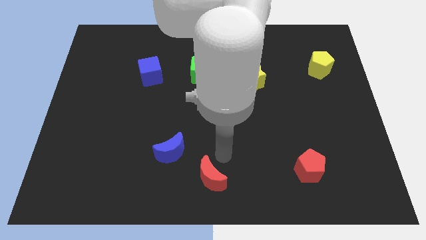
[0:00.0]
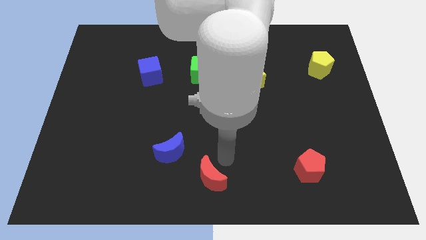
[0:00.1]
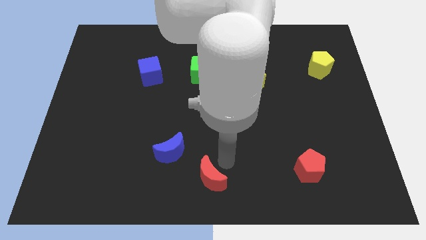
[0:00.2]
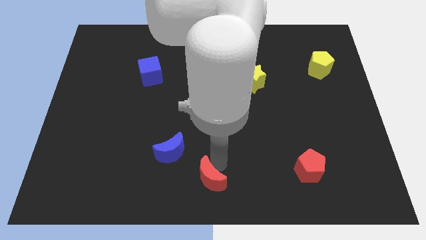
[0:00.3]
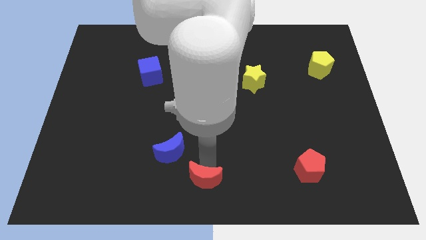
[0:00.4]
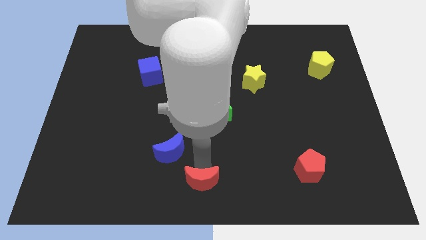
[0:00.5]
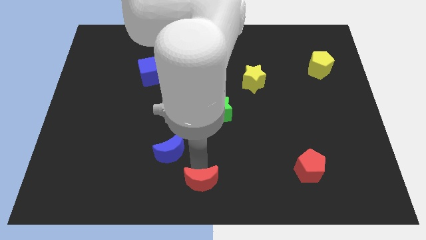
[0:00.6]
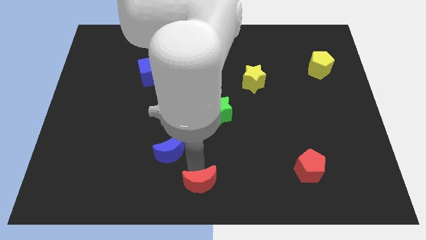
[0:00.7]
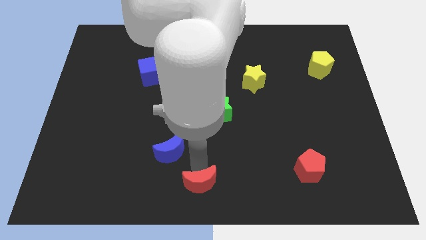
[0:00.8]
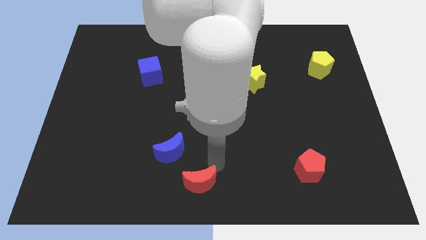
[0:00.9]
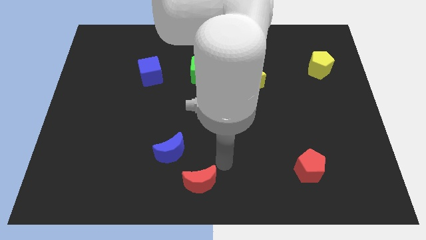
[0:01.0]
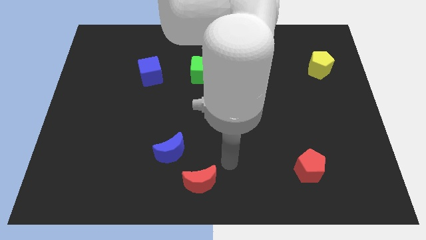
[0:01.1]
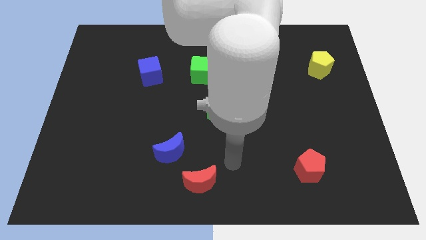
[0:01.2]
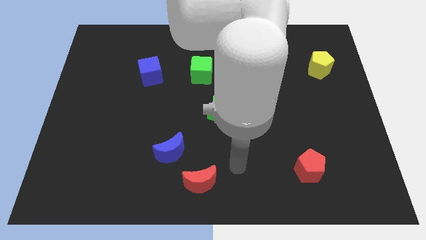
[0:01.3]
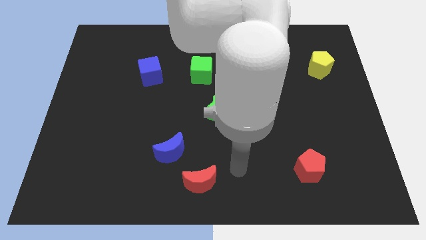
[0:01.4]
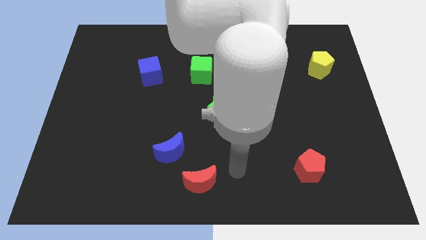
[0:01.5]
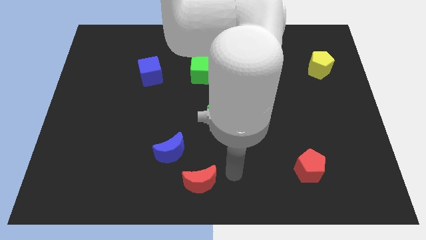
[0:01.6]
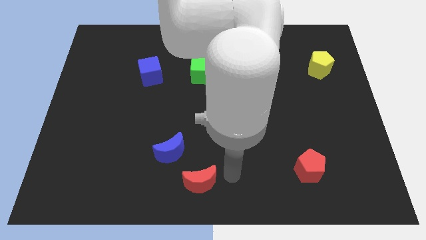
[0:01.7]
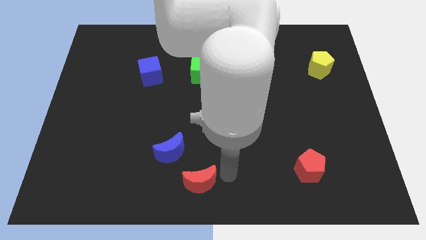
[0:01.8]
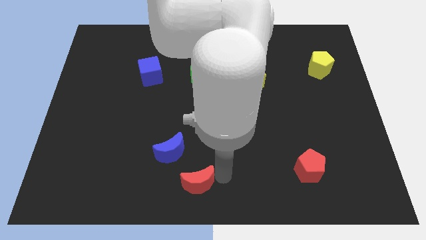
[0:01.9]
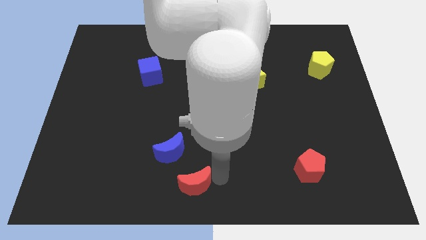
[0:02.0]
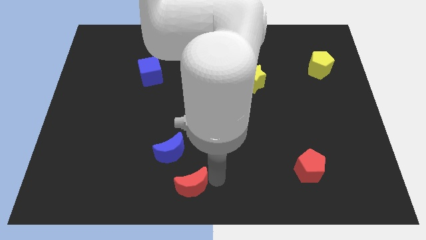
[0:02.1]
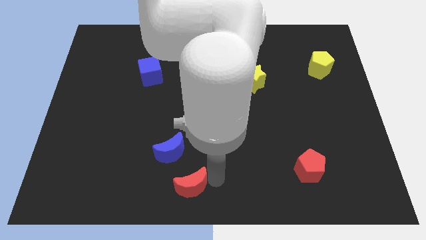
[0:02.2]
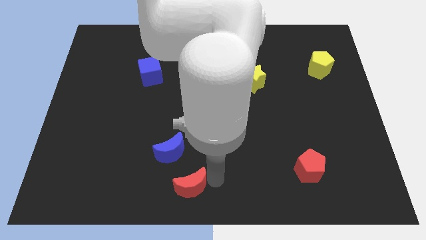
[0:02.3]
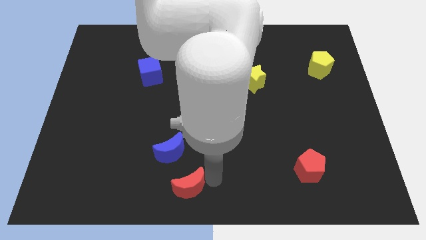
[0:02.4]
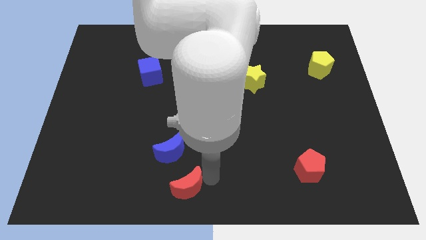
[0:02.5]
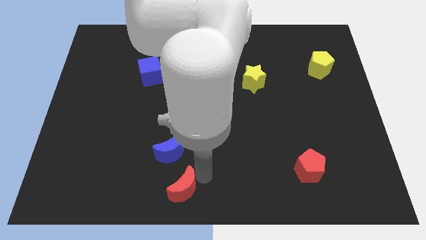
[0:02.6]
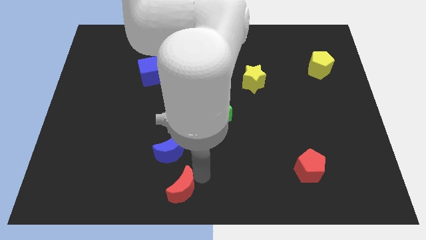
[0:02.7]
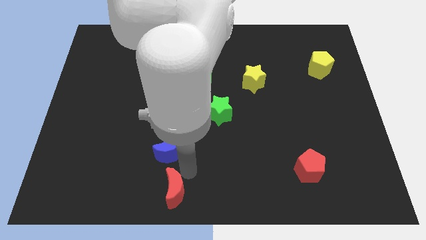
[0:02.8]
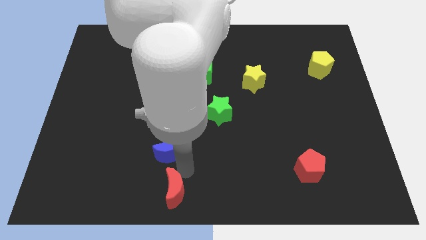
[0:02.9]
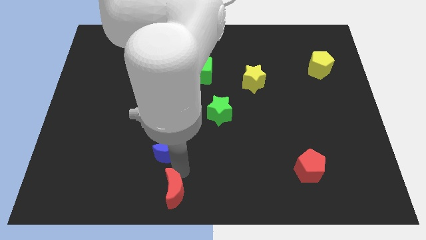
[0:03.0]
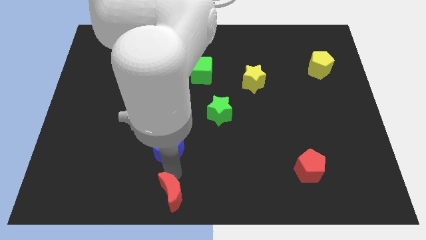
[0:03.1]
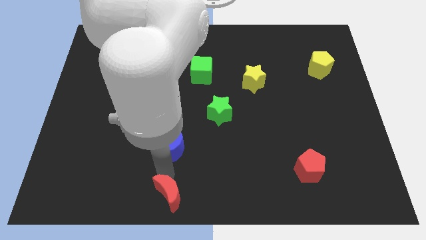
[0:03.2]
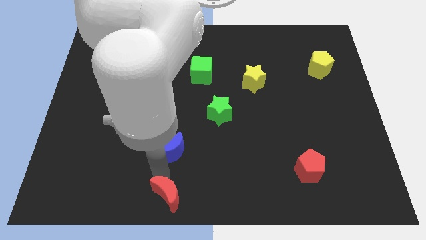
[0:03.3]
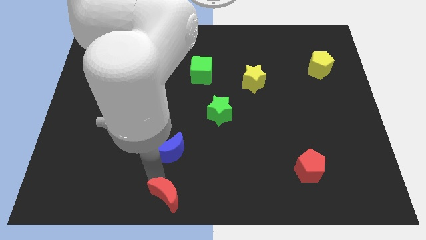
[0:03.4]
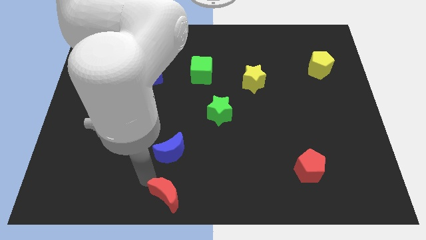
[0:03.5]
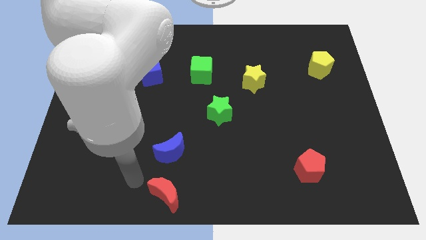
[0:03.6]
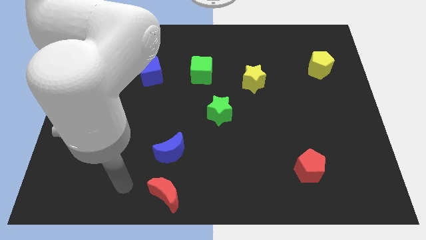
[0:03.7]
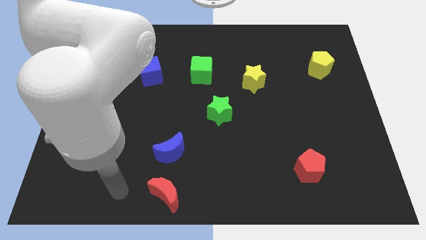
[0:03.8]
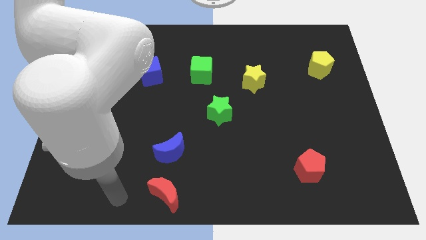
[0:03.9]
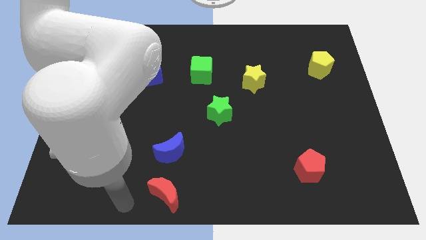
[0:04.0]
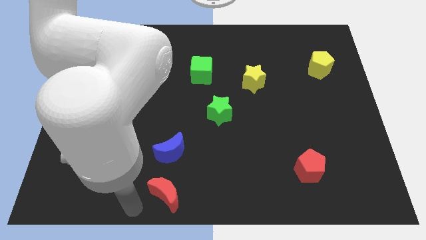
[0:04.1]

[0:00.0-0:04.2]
place red moon below the blue moon

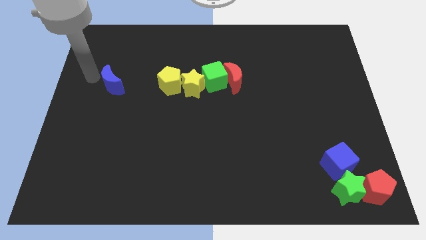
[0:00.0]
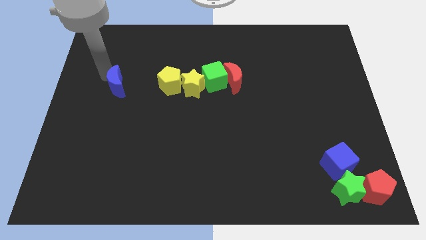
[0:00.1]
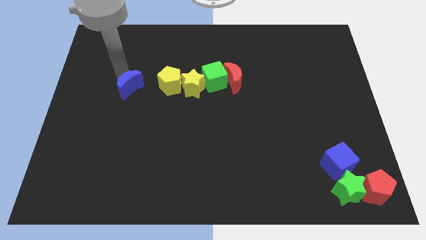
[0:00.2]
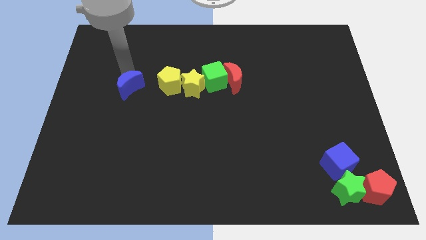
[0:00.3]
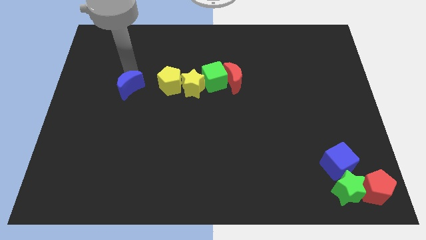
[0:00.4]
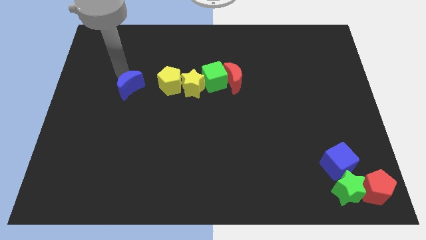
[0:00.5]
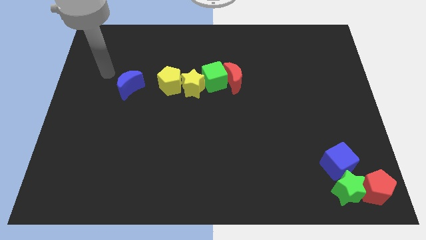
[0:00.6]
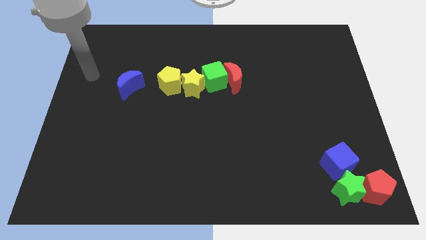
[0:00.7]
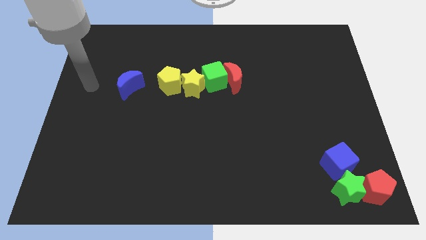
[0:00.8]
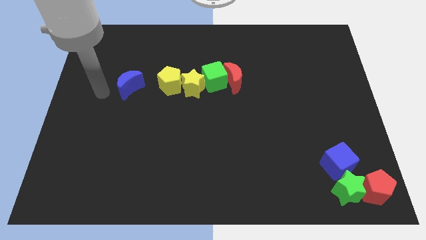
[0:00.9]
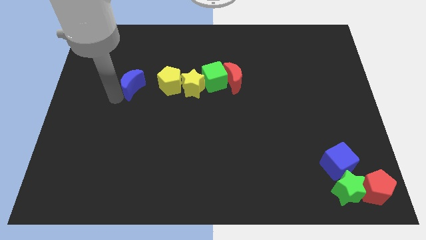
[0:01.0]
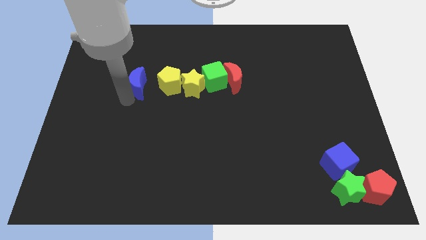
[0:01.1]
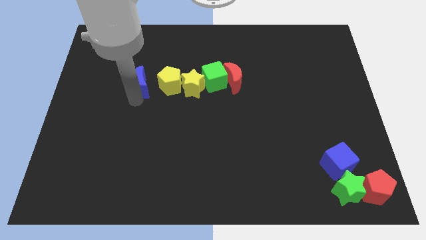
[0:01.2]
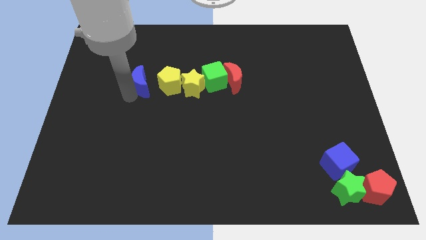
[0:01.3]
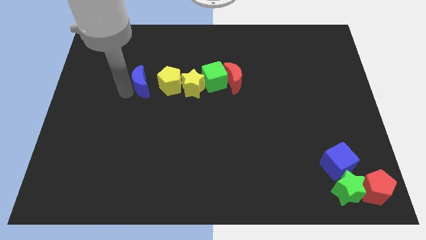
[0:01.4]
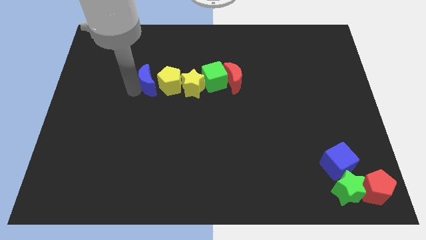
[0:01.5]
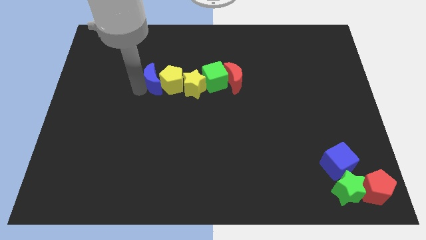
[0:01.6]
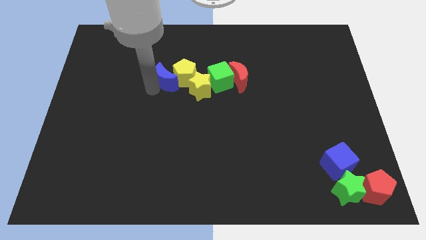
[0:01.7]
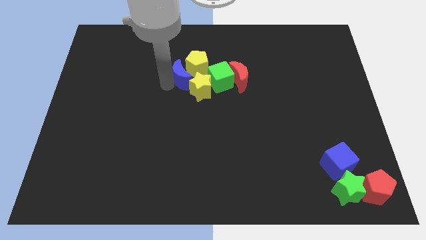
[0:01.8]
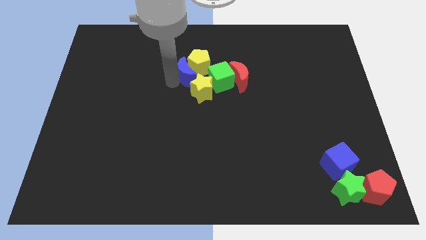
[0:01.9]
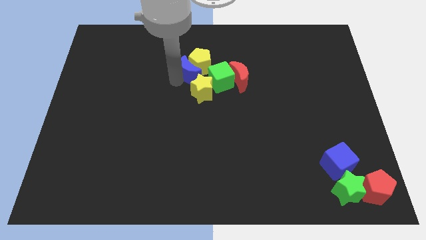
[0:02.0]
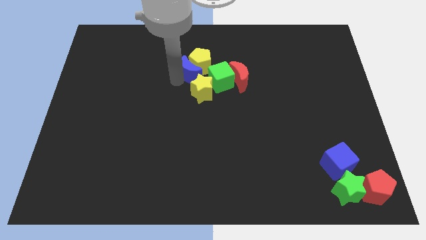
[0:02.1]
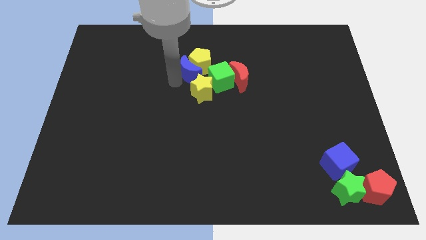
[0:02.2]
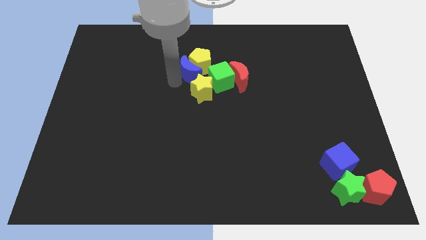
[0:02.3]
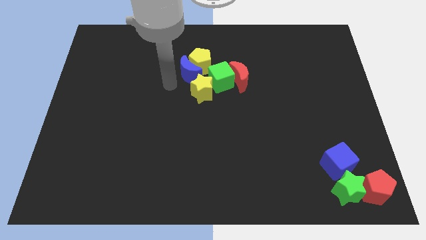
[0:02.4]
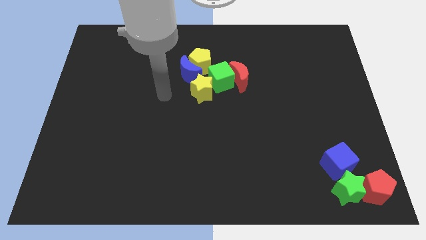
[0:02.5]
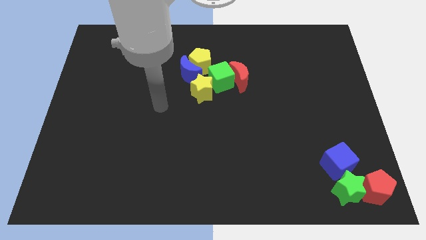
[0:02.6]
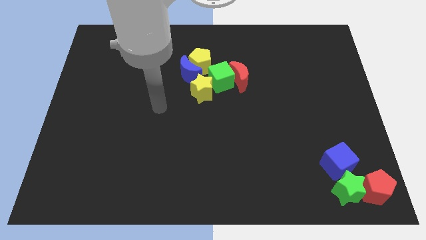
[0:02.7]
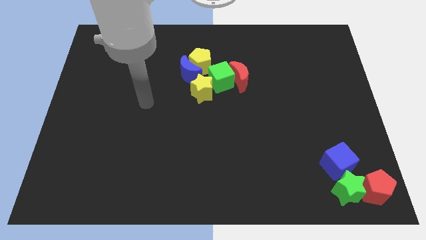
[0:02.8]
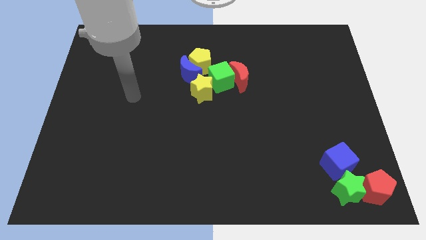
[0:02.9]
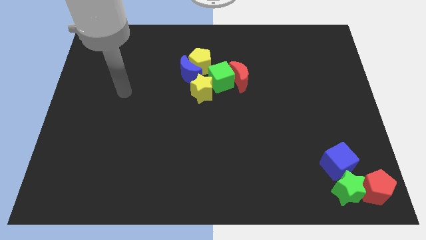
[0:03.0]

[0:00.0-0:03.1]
push the blue crescent into group of blocks

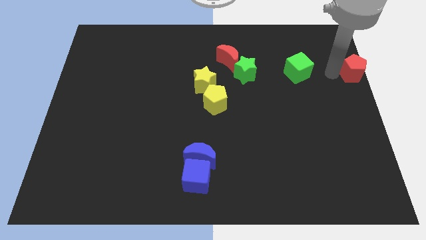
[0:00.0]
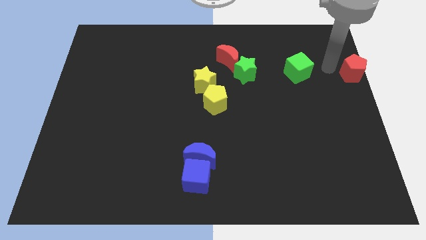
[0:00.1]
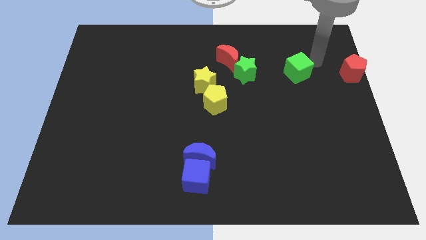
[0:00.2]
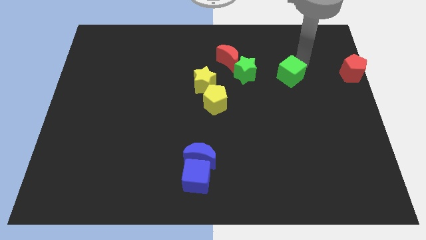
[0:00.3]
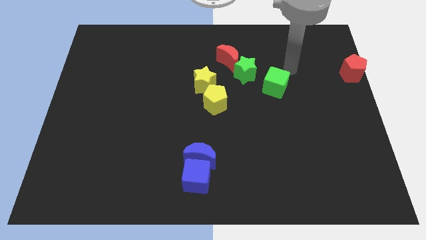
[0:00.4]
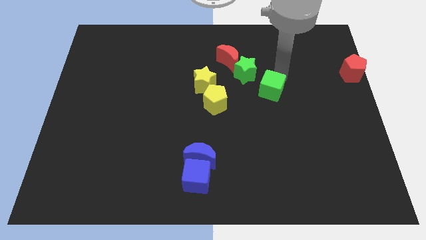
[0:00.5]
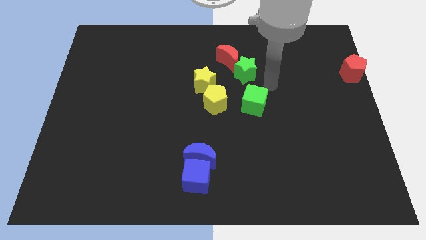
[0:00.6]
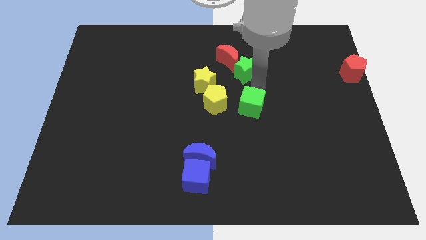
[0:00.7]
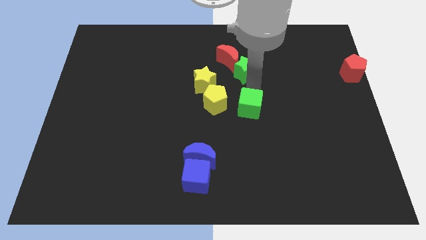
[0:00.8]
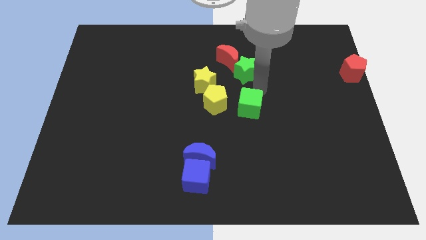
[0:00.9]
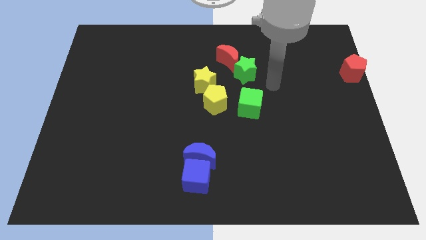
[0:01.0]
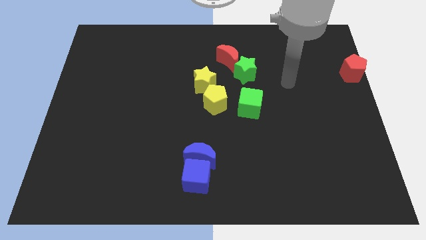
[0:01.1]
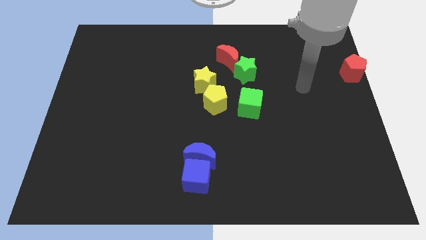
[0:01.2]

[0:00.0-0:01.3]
push the green square down

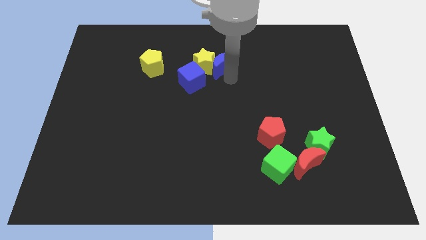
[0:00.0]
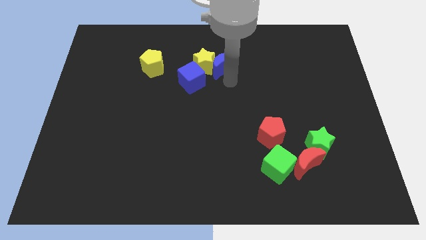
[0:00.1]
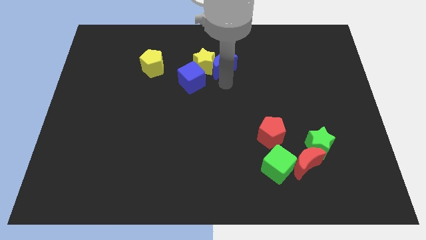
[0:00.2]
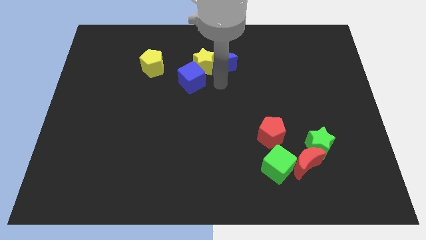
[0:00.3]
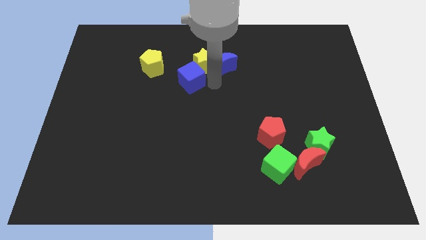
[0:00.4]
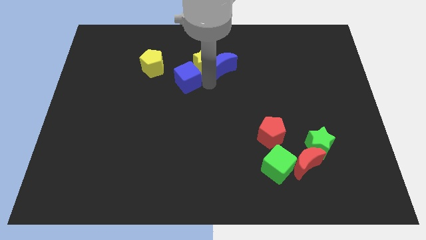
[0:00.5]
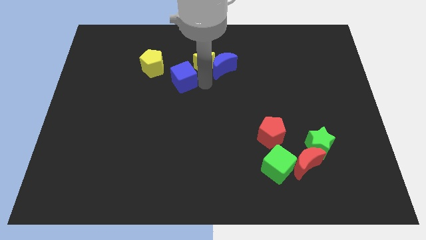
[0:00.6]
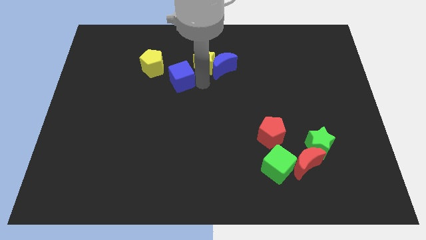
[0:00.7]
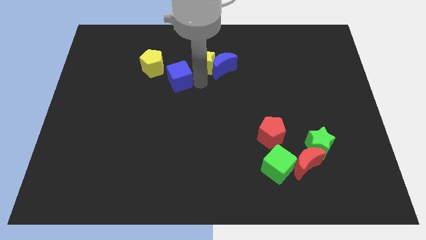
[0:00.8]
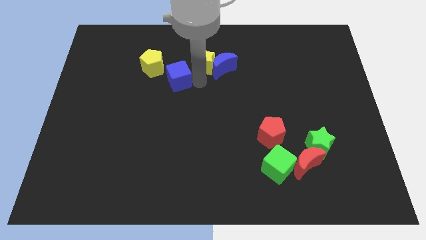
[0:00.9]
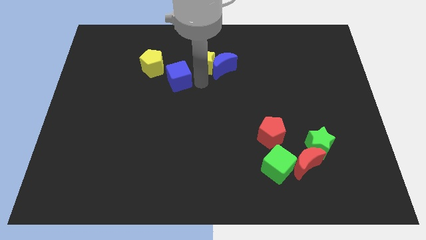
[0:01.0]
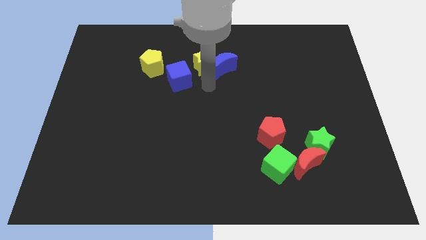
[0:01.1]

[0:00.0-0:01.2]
push the blue cube near yellow pentagon
